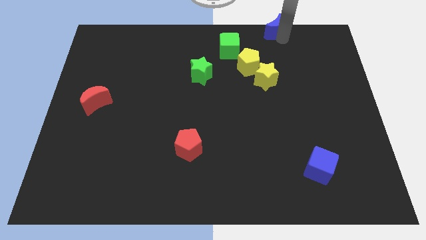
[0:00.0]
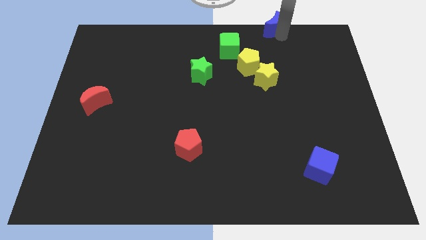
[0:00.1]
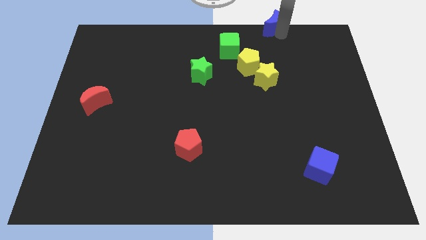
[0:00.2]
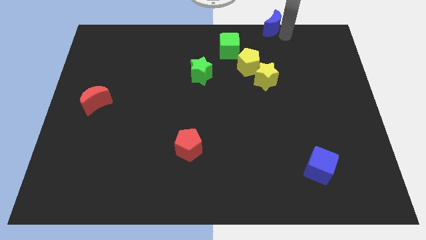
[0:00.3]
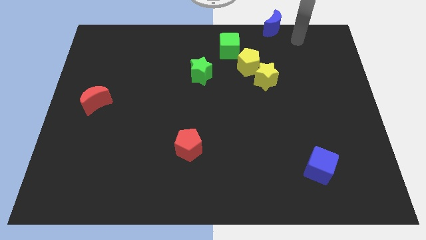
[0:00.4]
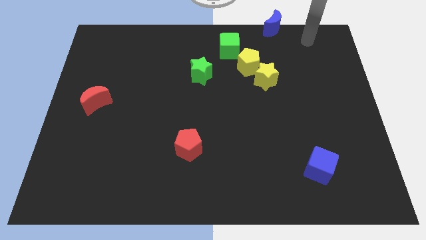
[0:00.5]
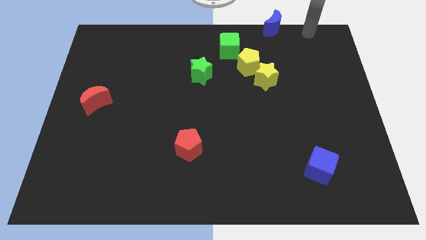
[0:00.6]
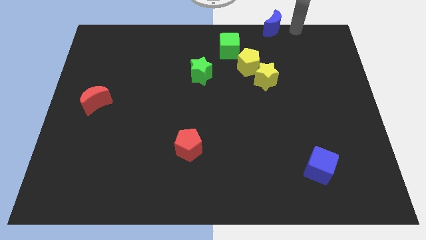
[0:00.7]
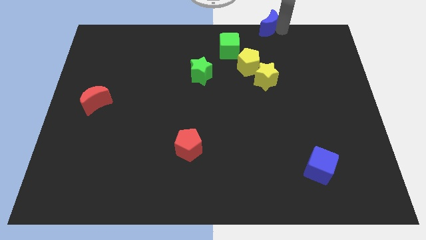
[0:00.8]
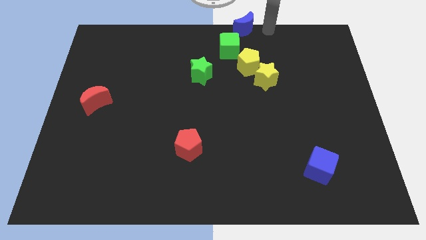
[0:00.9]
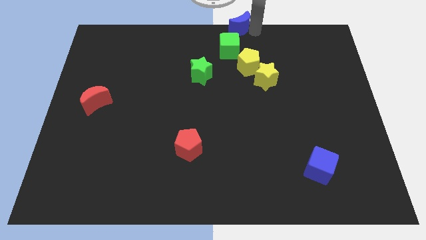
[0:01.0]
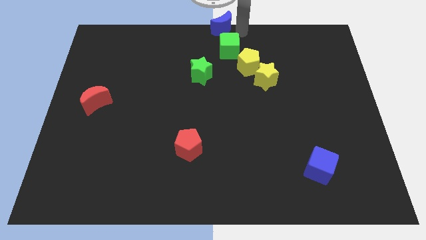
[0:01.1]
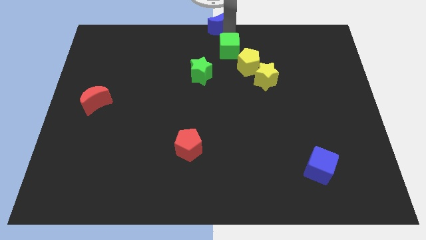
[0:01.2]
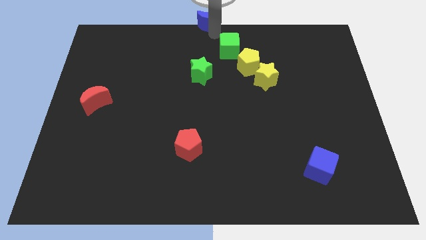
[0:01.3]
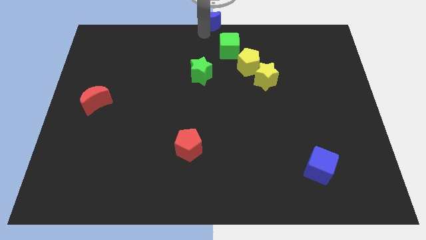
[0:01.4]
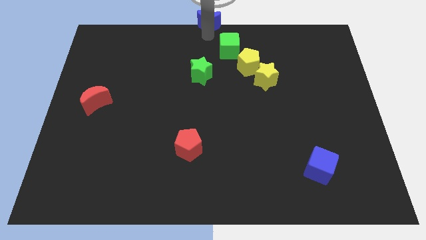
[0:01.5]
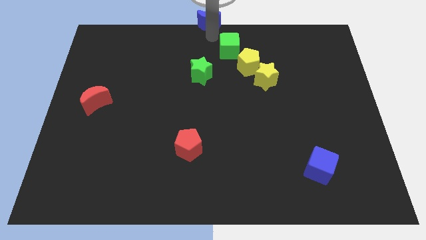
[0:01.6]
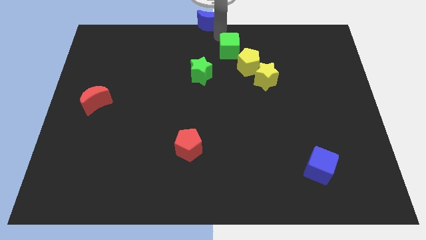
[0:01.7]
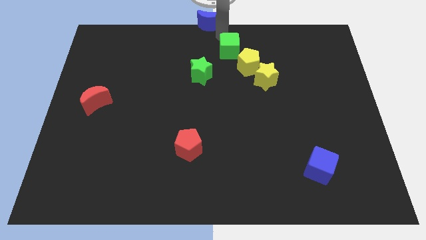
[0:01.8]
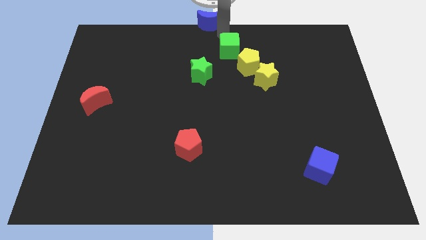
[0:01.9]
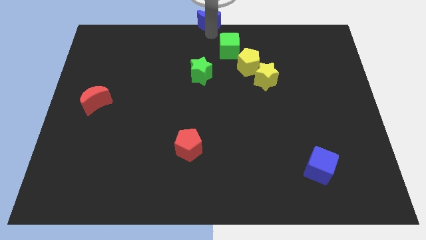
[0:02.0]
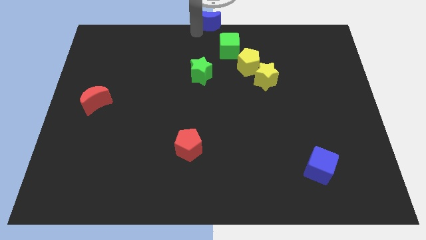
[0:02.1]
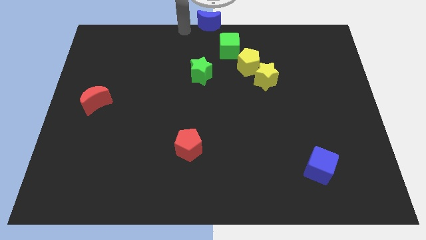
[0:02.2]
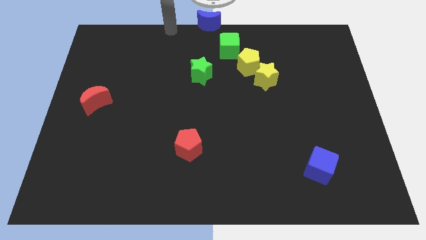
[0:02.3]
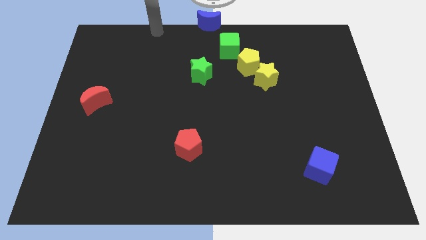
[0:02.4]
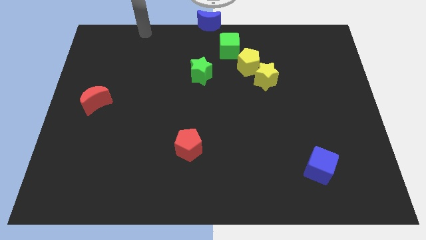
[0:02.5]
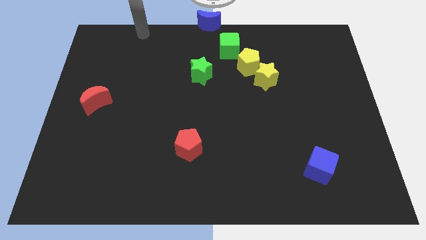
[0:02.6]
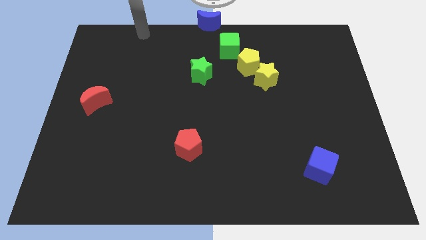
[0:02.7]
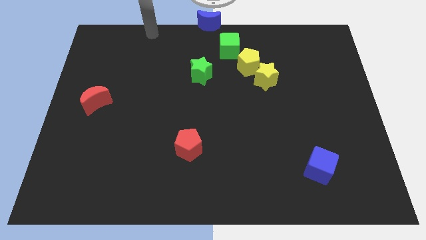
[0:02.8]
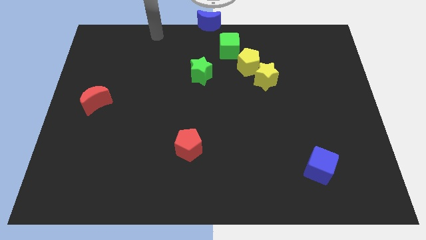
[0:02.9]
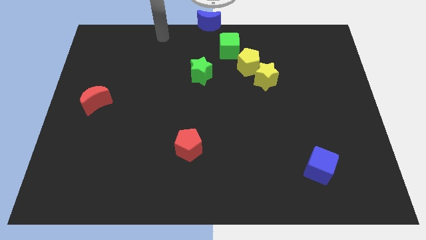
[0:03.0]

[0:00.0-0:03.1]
move the blue moon to the top center

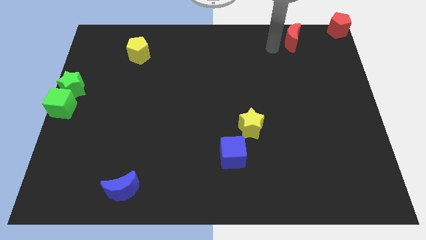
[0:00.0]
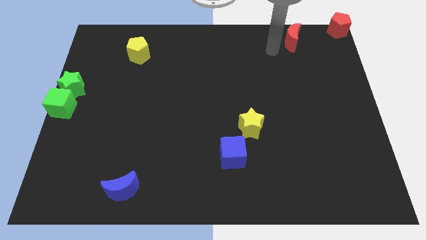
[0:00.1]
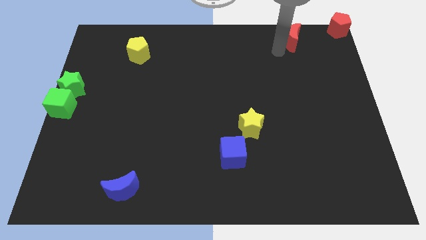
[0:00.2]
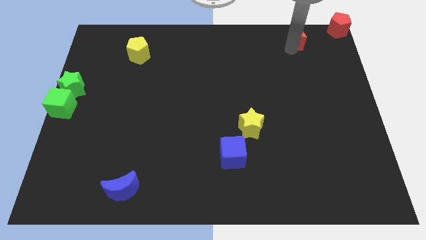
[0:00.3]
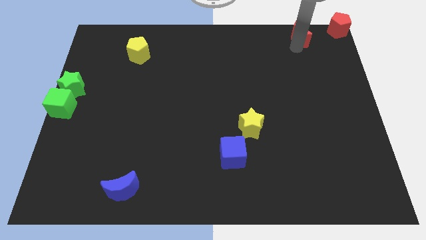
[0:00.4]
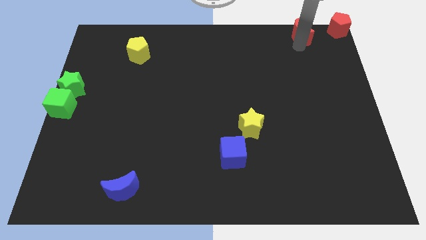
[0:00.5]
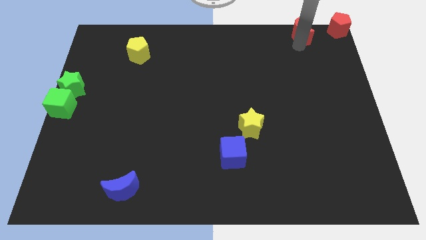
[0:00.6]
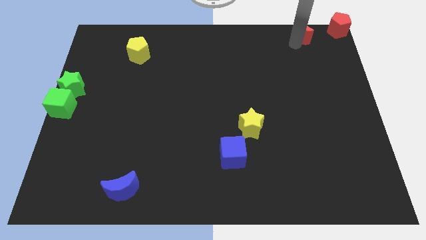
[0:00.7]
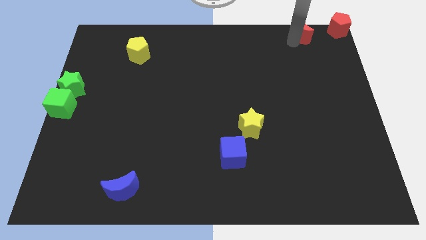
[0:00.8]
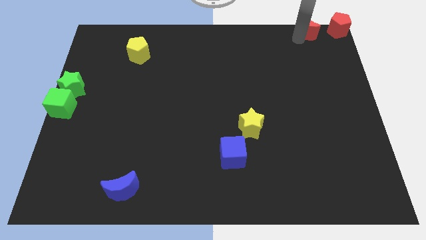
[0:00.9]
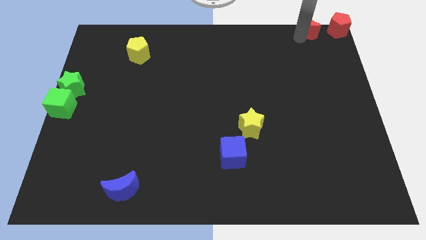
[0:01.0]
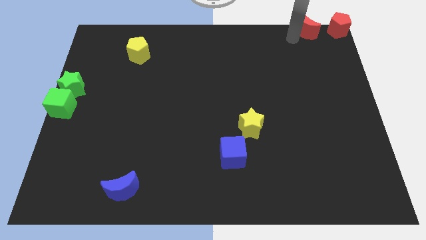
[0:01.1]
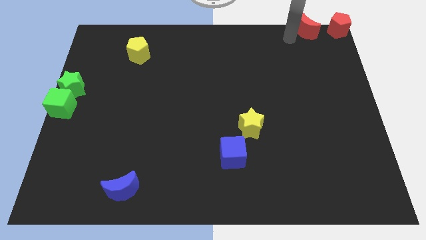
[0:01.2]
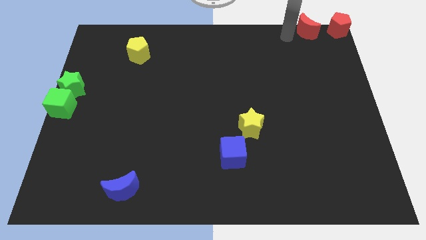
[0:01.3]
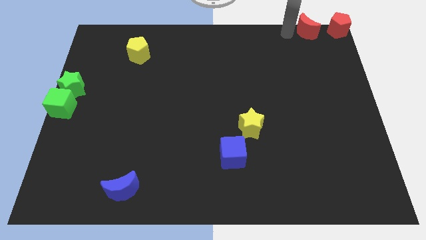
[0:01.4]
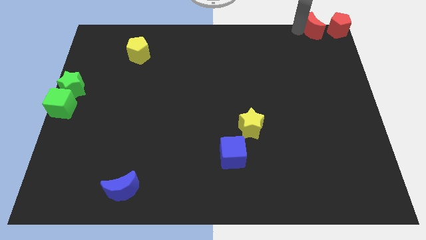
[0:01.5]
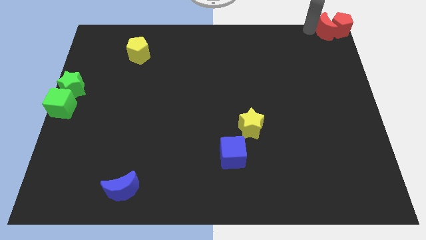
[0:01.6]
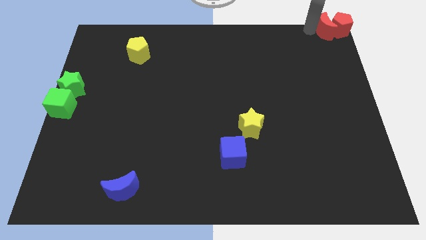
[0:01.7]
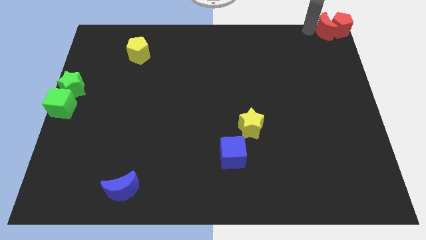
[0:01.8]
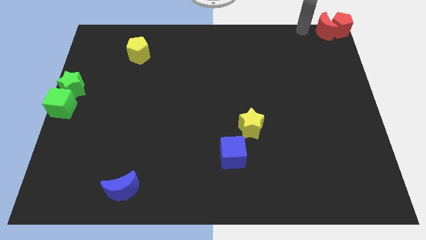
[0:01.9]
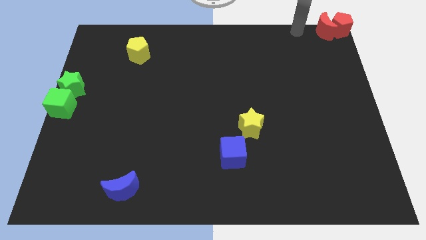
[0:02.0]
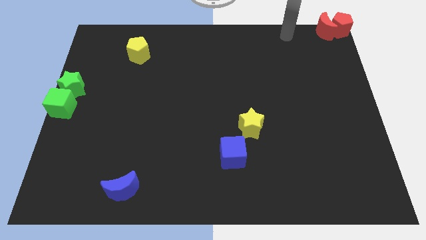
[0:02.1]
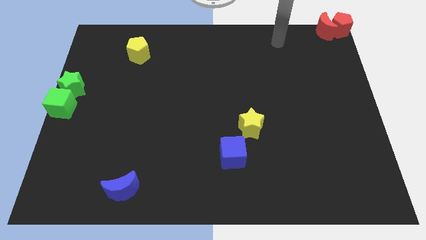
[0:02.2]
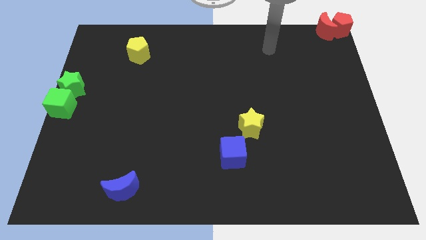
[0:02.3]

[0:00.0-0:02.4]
place the red crescent into left of the red pentagon

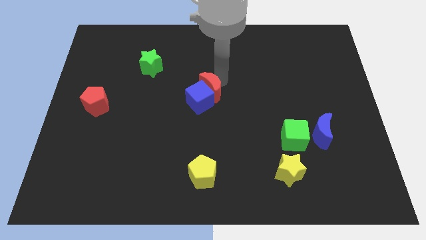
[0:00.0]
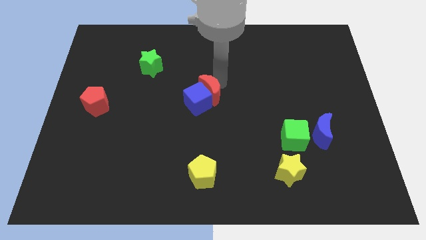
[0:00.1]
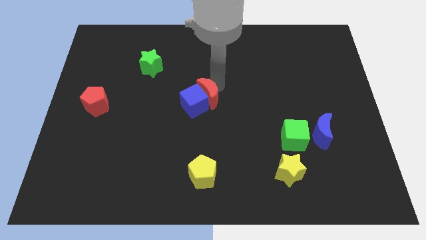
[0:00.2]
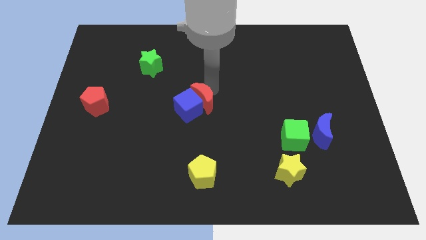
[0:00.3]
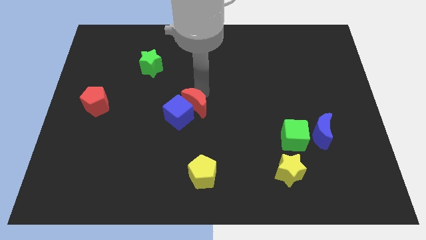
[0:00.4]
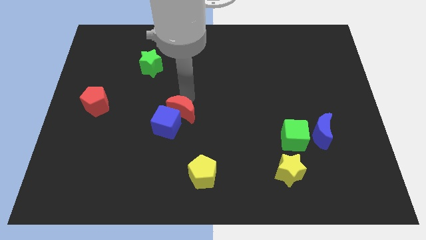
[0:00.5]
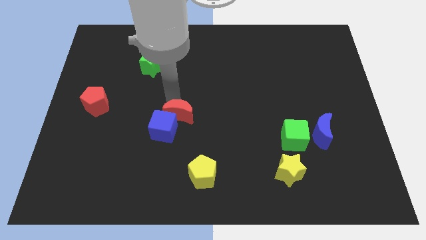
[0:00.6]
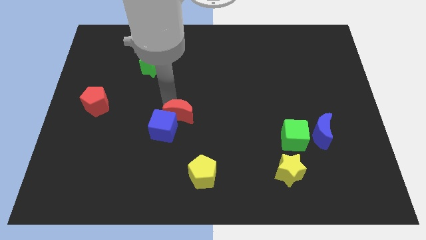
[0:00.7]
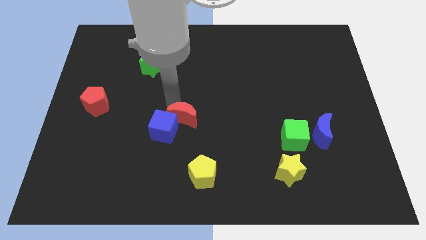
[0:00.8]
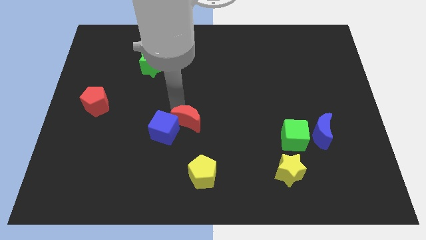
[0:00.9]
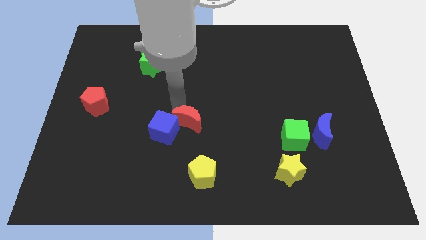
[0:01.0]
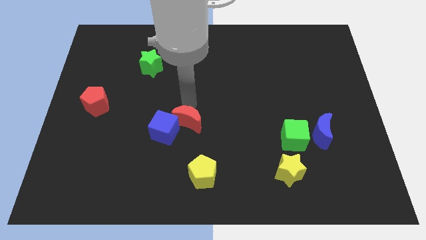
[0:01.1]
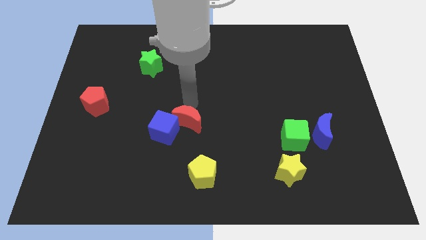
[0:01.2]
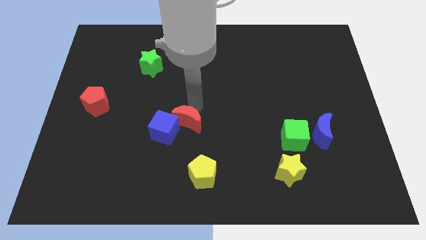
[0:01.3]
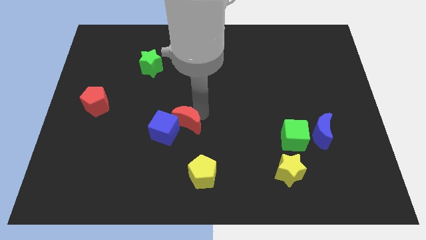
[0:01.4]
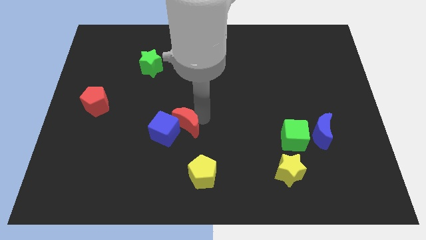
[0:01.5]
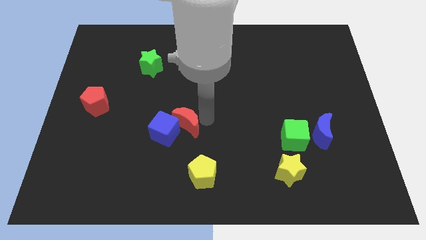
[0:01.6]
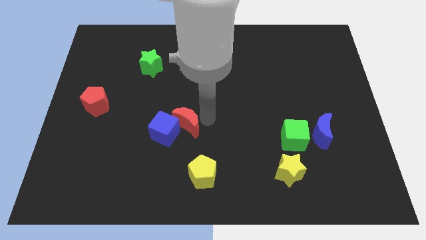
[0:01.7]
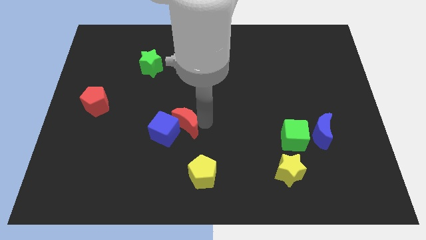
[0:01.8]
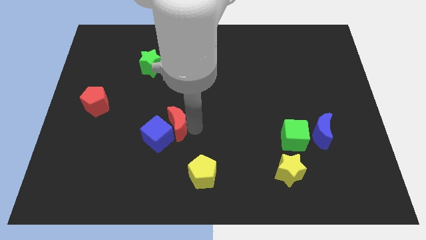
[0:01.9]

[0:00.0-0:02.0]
move the red moon along with the blue cube diagonally to the yellow pentagon

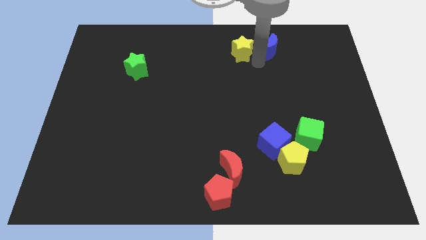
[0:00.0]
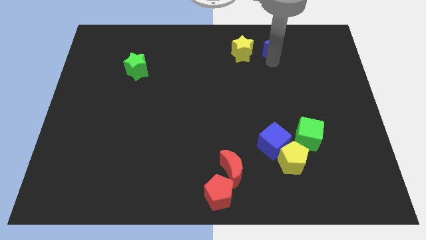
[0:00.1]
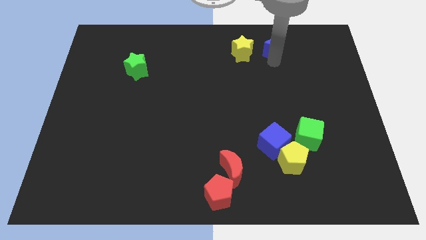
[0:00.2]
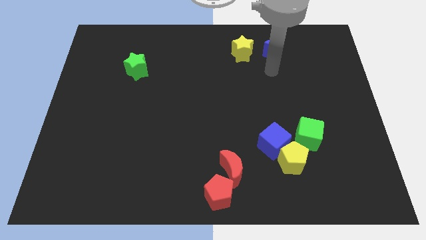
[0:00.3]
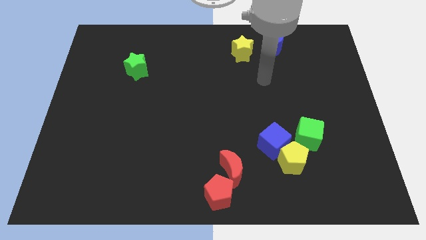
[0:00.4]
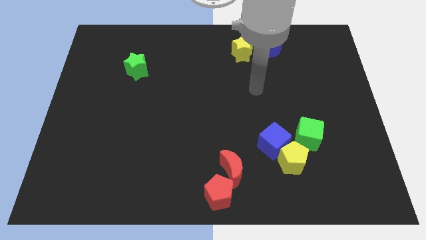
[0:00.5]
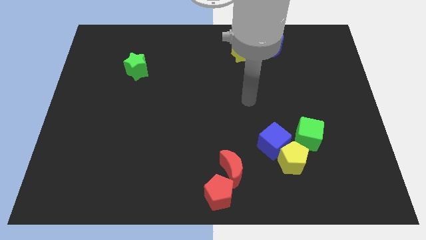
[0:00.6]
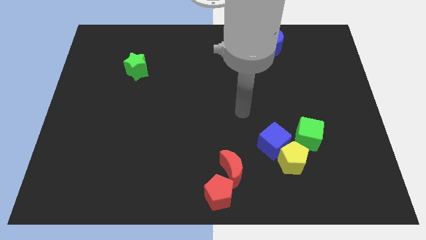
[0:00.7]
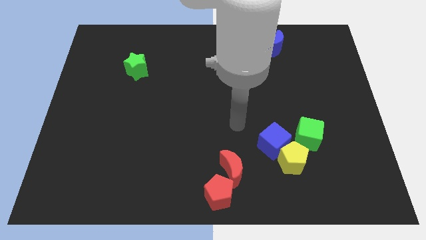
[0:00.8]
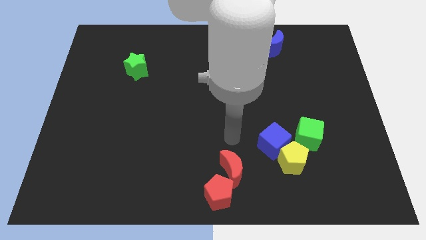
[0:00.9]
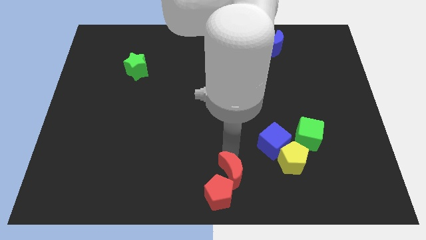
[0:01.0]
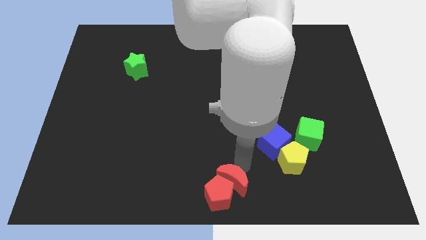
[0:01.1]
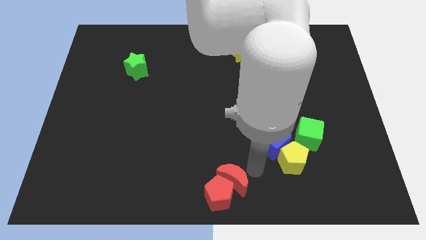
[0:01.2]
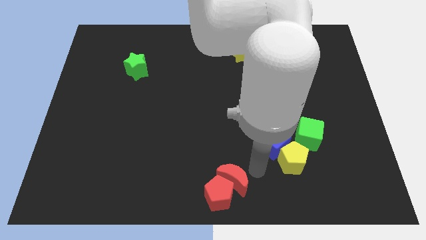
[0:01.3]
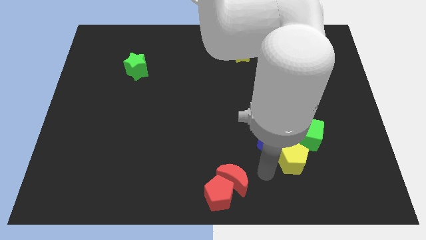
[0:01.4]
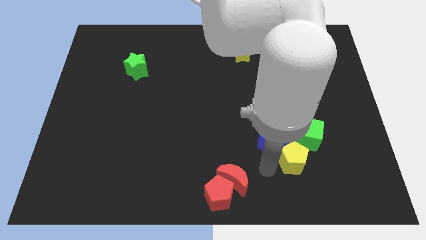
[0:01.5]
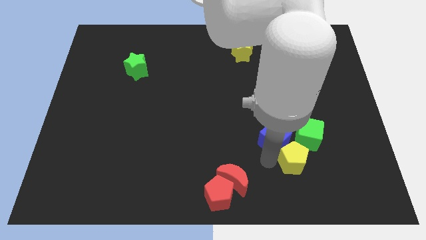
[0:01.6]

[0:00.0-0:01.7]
push the red crescent slightly to the red pentagon
